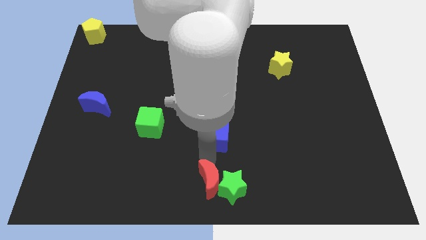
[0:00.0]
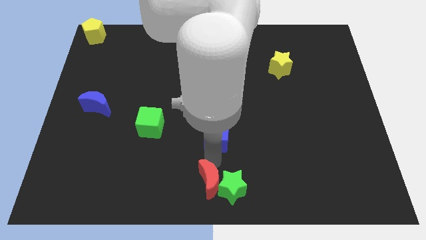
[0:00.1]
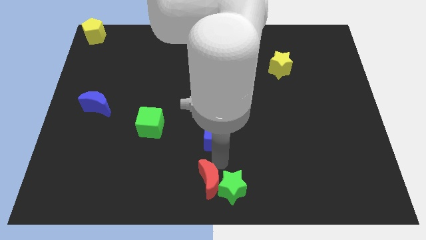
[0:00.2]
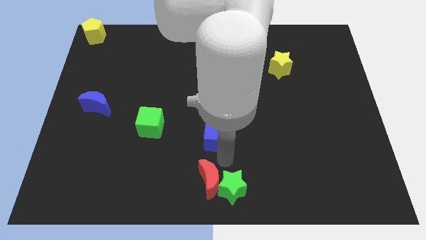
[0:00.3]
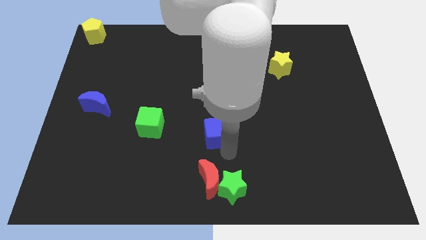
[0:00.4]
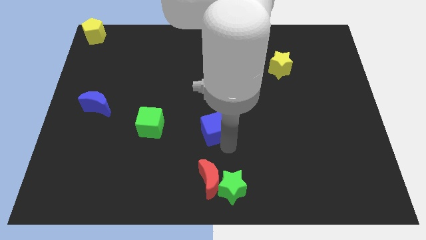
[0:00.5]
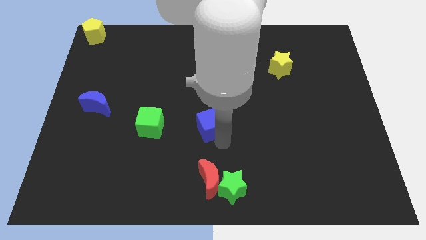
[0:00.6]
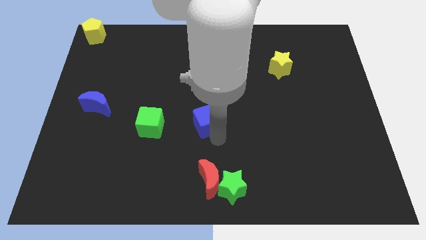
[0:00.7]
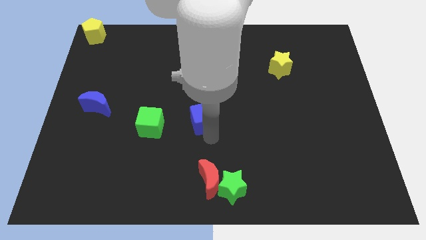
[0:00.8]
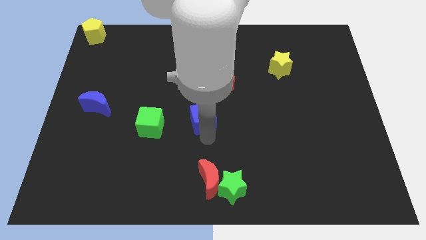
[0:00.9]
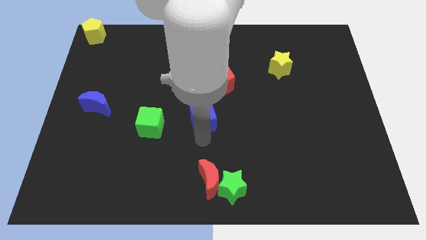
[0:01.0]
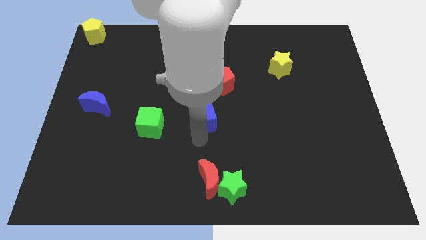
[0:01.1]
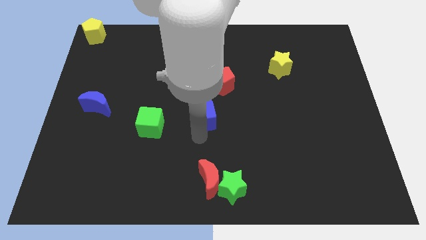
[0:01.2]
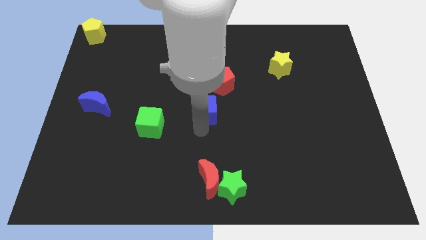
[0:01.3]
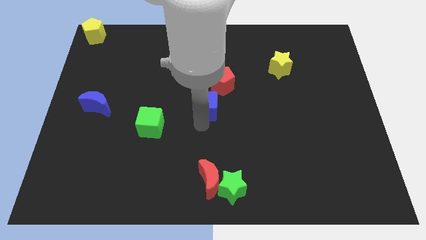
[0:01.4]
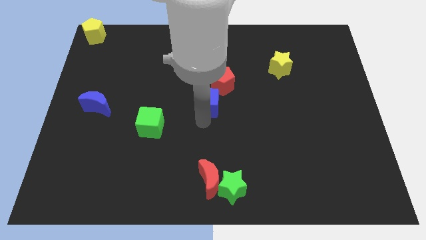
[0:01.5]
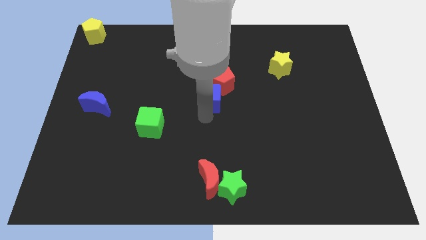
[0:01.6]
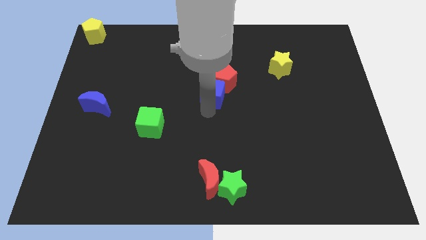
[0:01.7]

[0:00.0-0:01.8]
move the blue cube to the bottom of the red pentagon

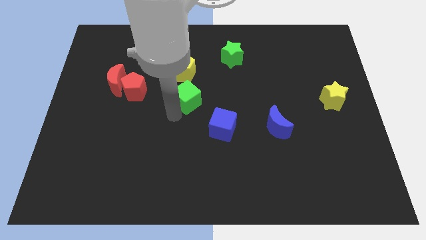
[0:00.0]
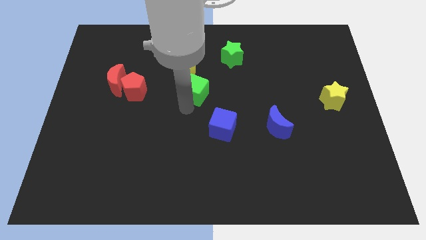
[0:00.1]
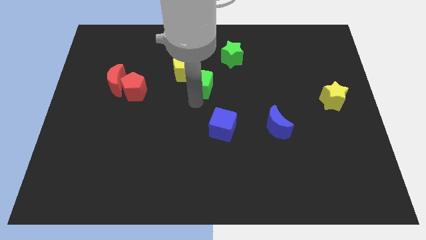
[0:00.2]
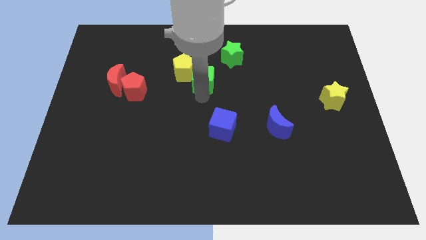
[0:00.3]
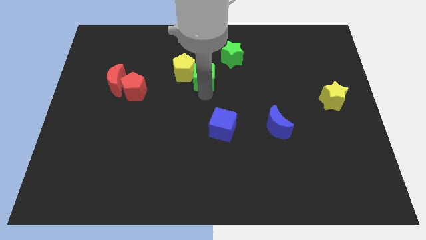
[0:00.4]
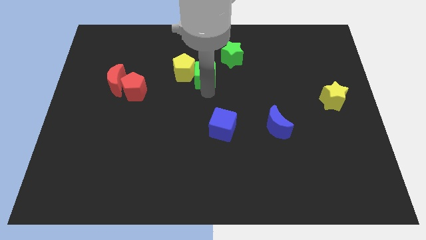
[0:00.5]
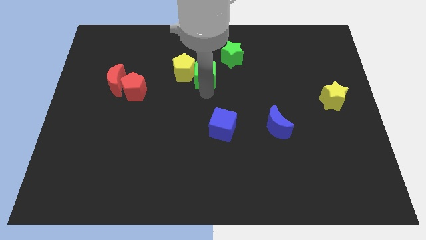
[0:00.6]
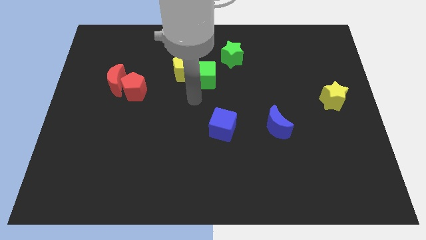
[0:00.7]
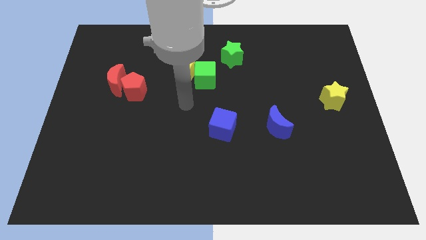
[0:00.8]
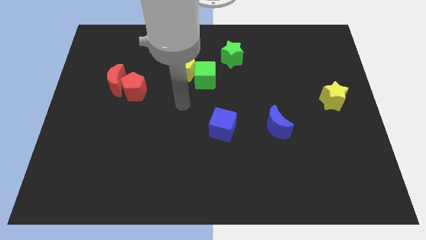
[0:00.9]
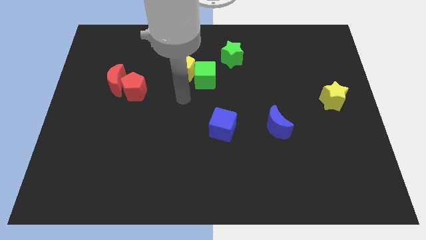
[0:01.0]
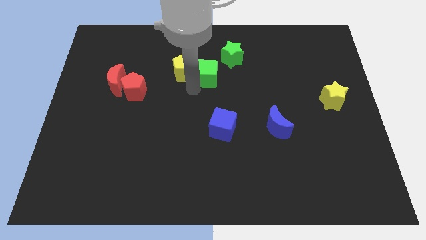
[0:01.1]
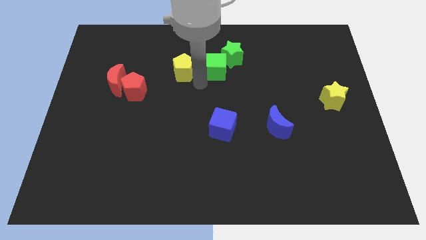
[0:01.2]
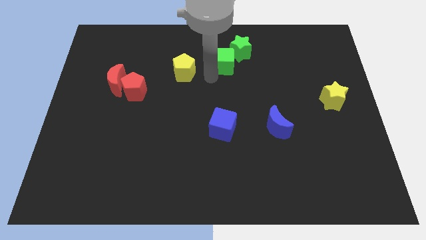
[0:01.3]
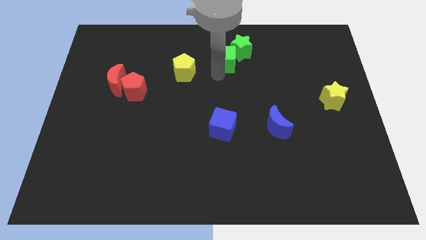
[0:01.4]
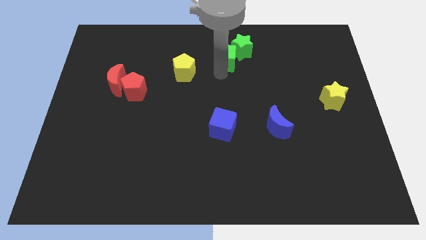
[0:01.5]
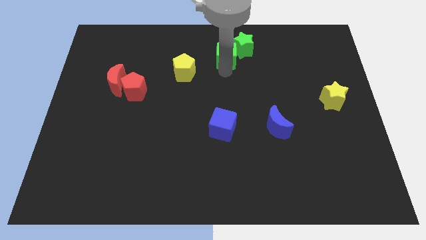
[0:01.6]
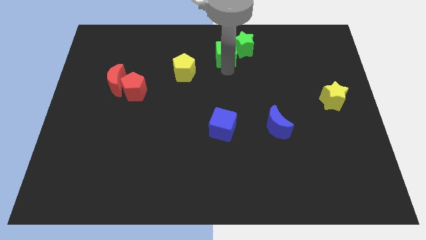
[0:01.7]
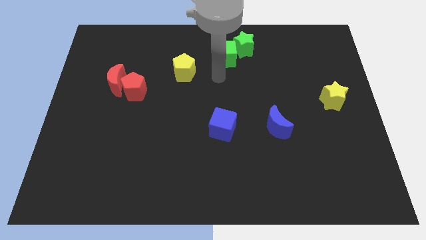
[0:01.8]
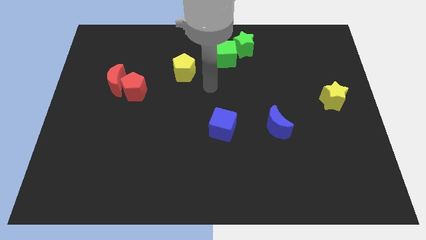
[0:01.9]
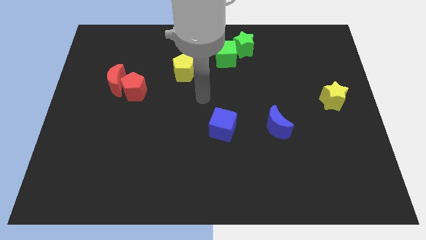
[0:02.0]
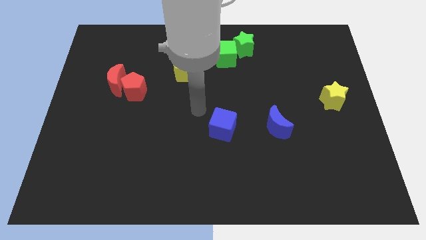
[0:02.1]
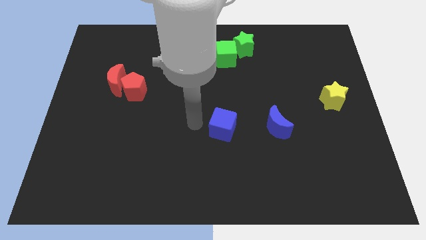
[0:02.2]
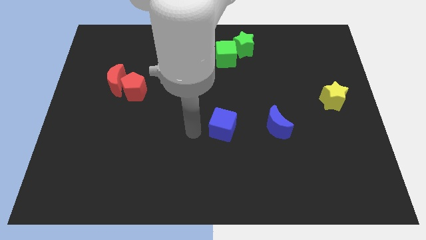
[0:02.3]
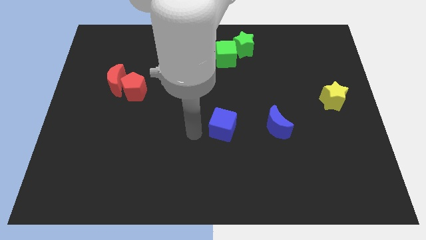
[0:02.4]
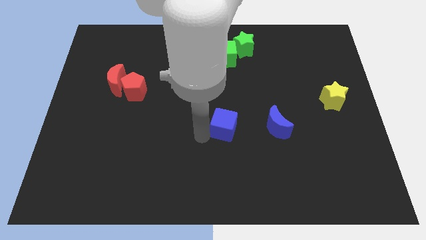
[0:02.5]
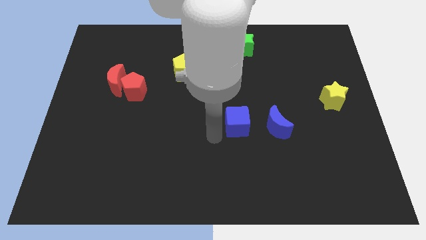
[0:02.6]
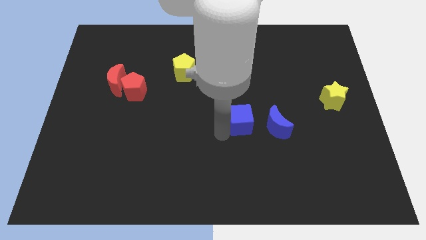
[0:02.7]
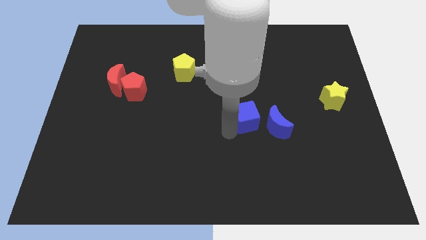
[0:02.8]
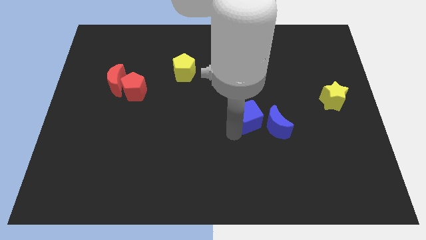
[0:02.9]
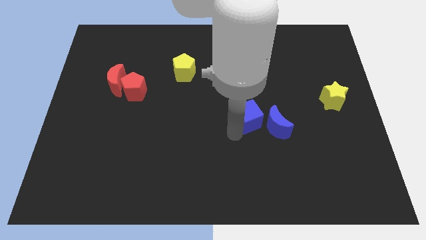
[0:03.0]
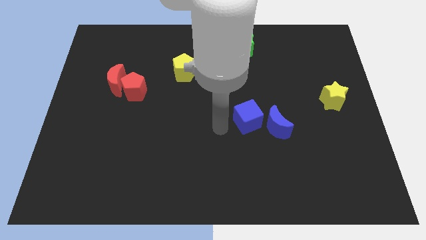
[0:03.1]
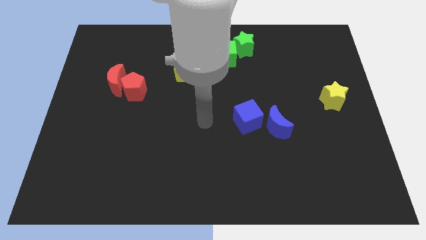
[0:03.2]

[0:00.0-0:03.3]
move the green cube into green star and blue cube into blue moon

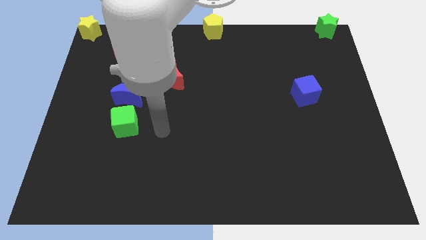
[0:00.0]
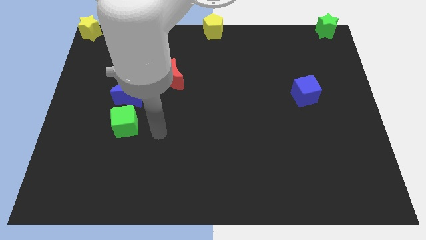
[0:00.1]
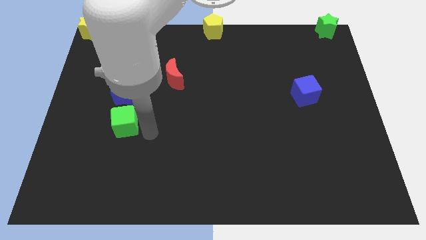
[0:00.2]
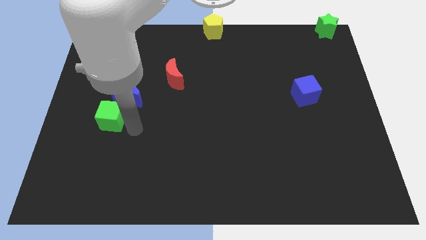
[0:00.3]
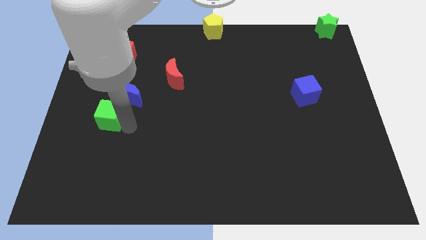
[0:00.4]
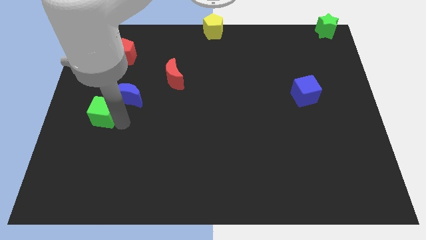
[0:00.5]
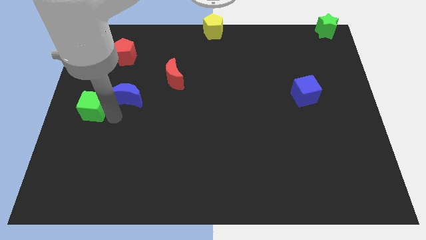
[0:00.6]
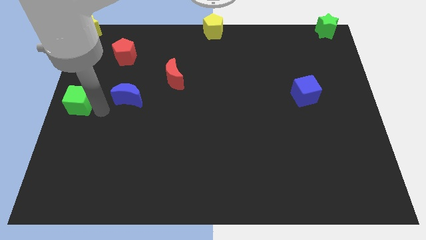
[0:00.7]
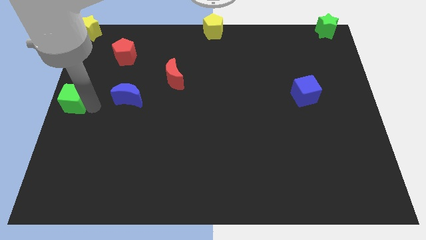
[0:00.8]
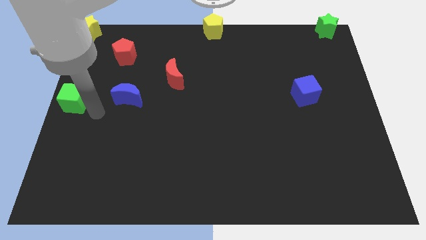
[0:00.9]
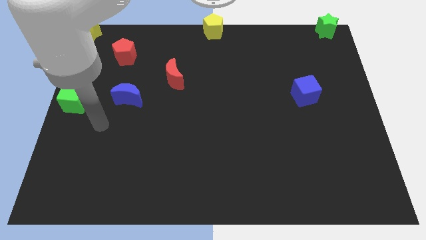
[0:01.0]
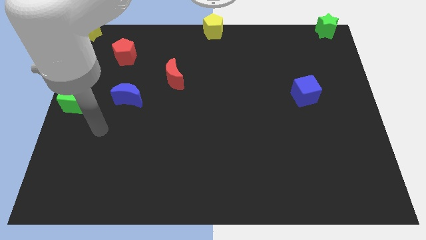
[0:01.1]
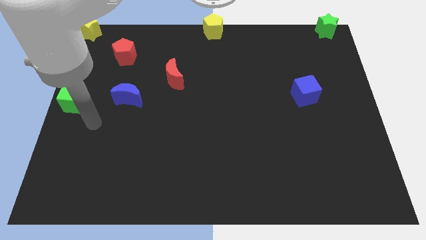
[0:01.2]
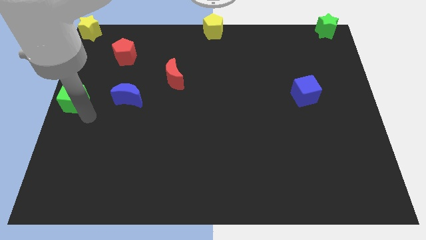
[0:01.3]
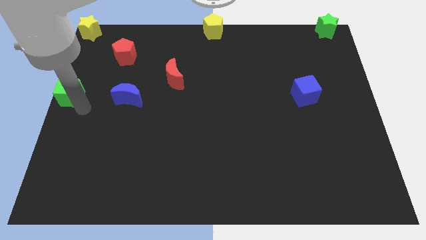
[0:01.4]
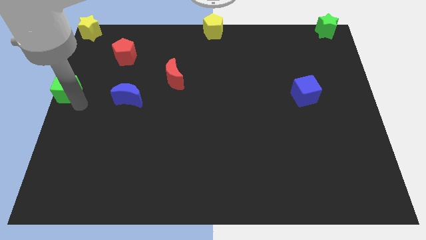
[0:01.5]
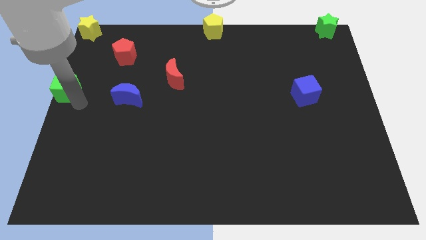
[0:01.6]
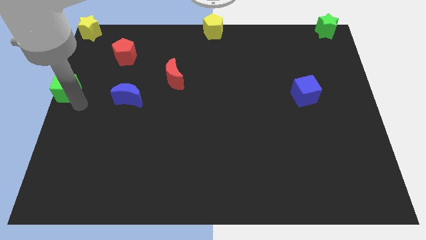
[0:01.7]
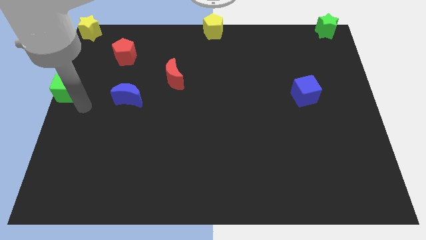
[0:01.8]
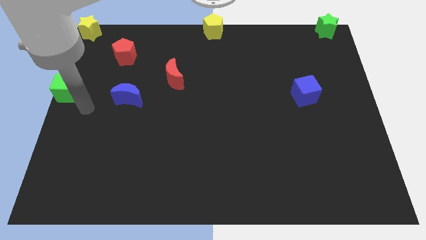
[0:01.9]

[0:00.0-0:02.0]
slide the green cube to center left

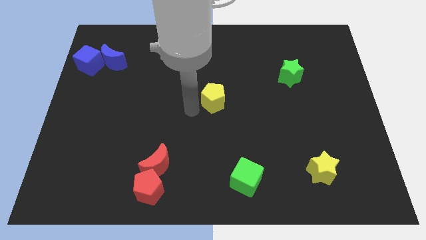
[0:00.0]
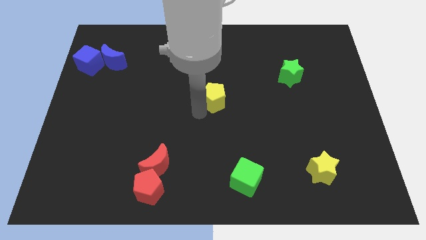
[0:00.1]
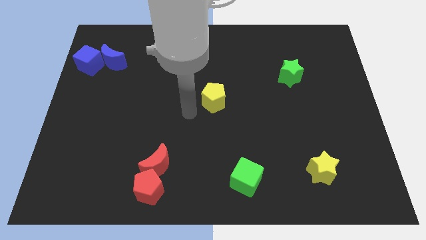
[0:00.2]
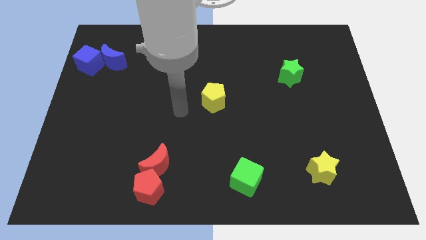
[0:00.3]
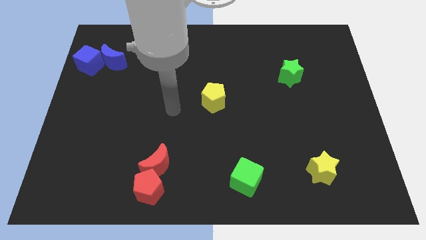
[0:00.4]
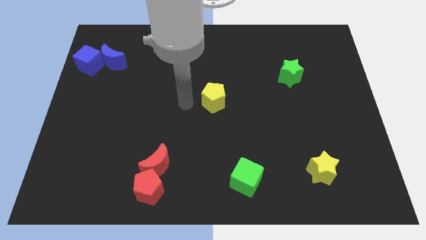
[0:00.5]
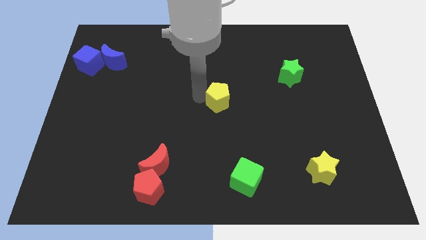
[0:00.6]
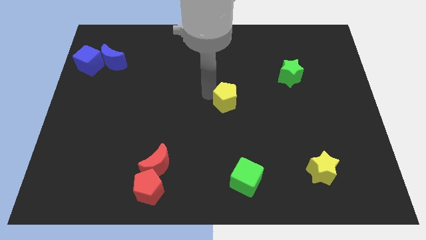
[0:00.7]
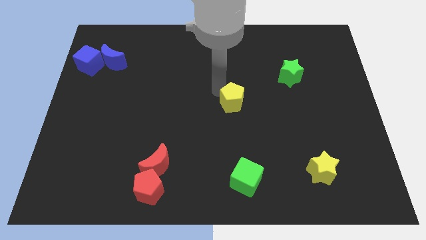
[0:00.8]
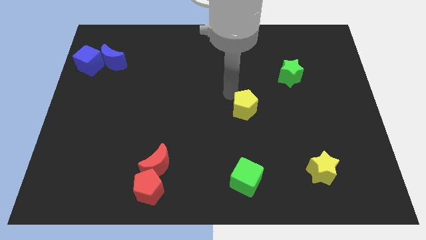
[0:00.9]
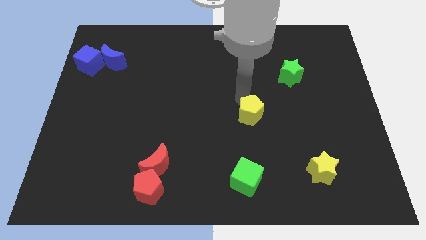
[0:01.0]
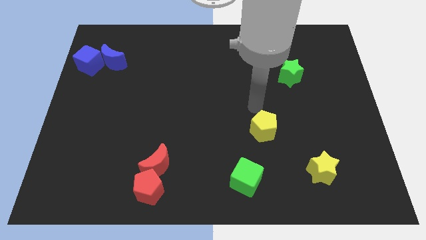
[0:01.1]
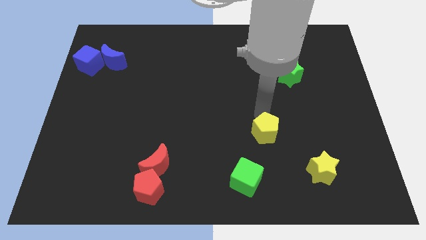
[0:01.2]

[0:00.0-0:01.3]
place the yellow pentagon in between the green star and green cube

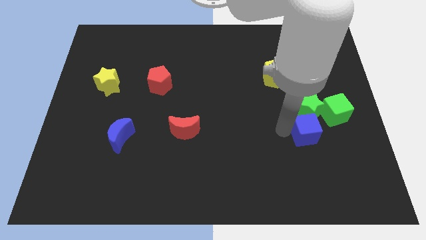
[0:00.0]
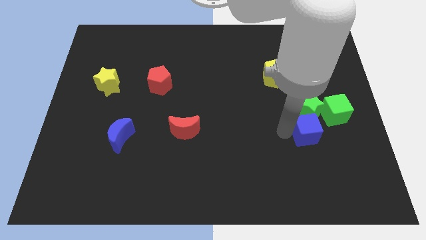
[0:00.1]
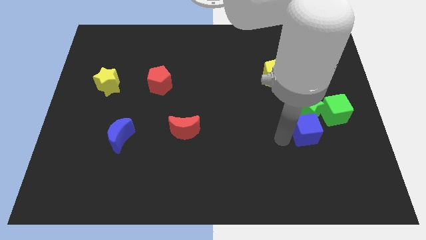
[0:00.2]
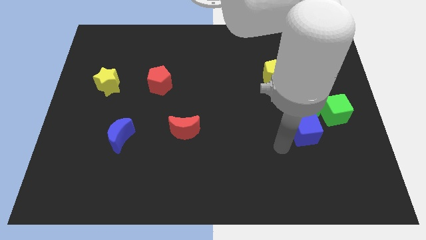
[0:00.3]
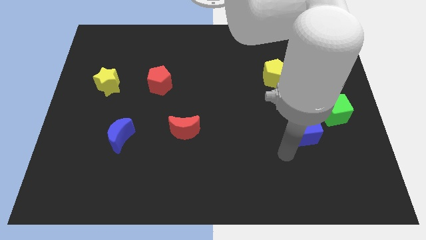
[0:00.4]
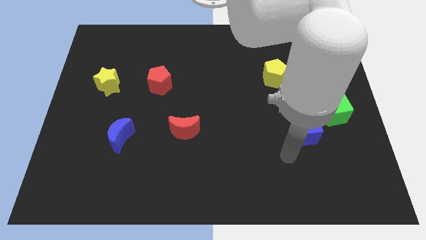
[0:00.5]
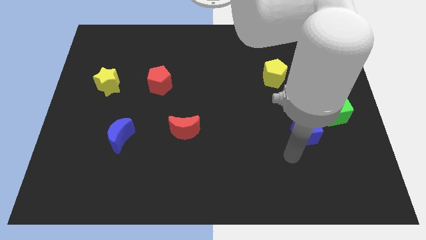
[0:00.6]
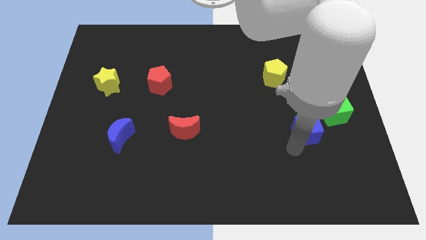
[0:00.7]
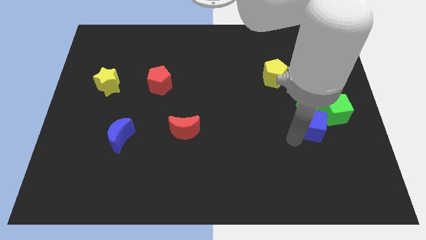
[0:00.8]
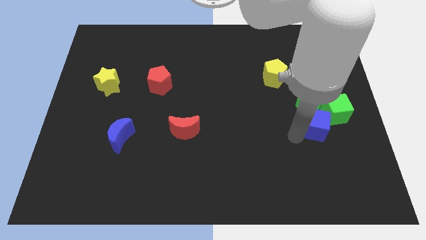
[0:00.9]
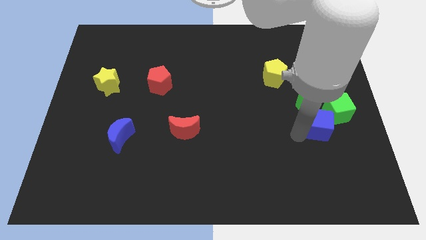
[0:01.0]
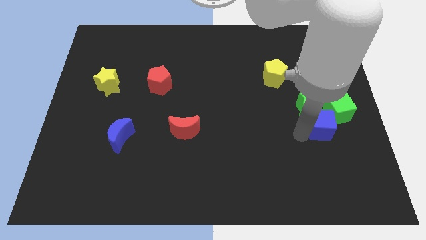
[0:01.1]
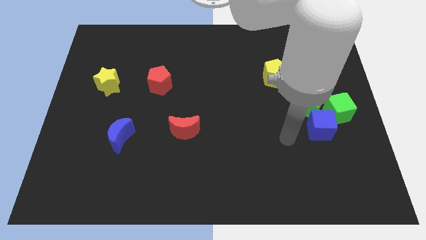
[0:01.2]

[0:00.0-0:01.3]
push the blue cube into green blocks
